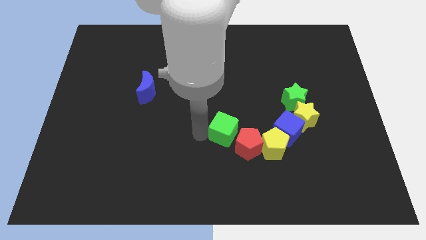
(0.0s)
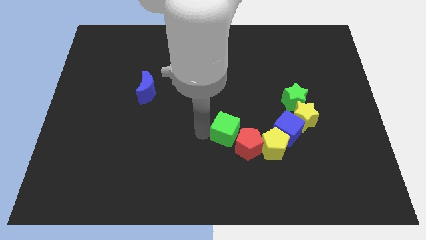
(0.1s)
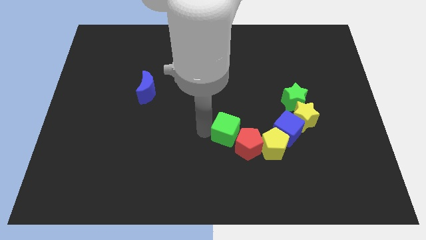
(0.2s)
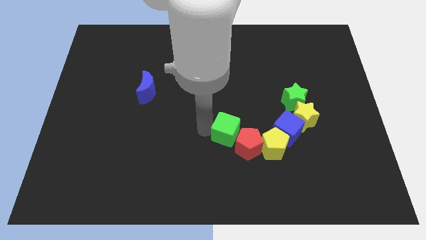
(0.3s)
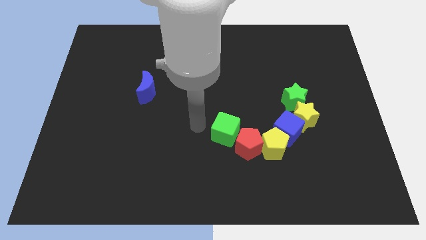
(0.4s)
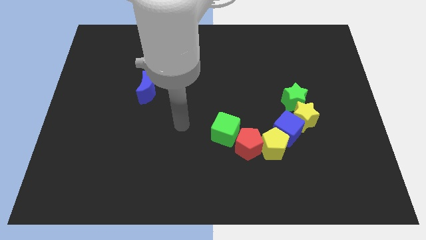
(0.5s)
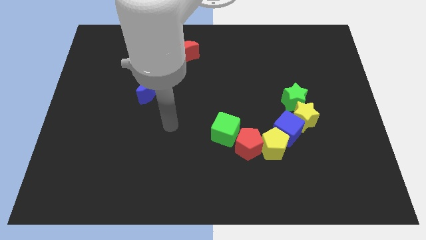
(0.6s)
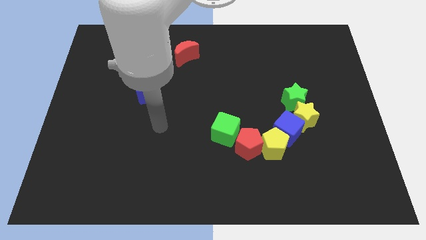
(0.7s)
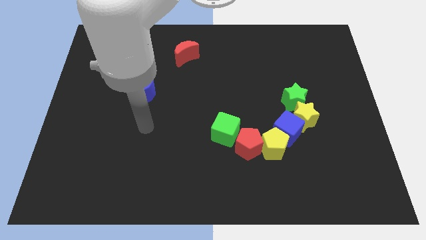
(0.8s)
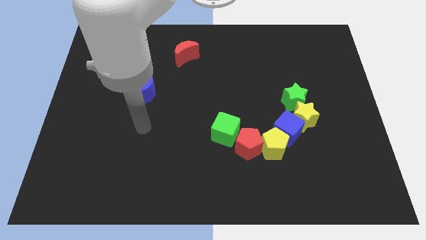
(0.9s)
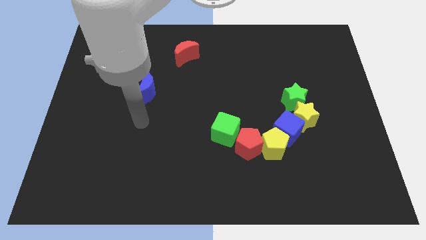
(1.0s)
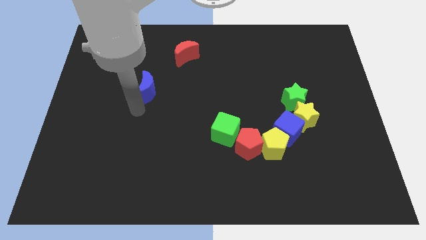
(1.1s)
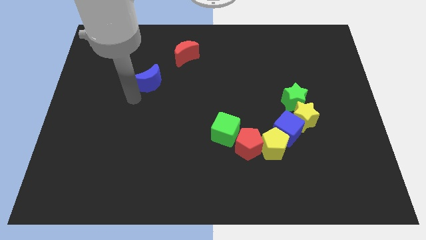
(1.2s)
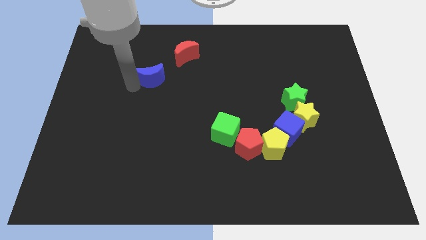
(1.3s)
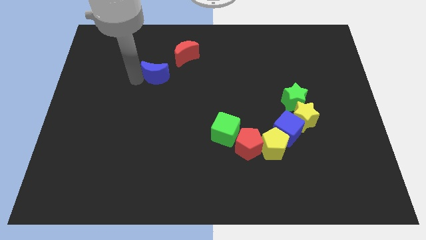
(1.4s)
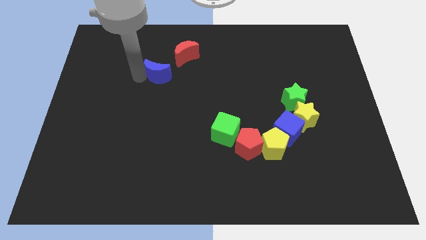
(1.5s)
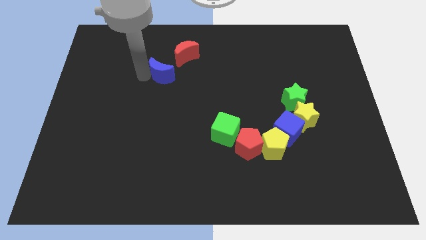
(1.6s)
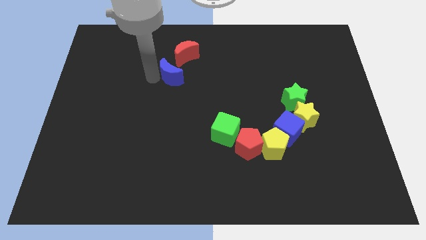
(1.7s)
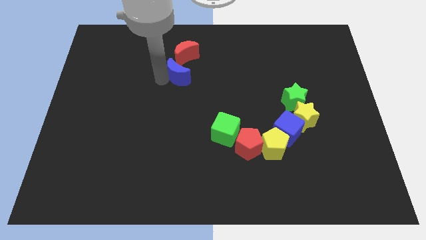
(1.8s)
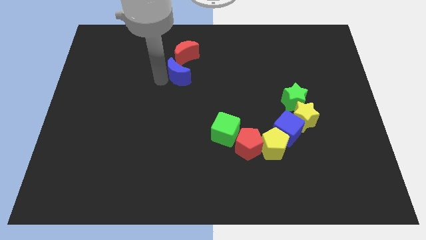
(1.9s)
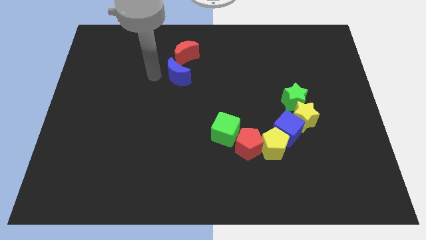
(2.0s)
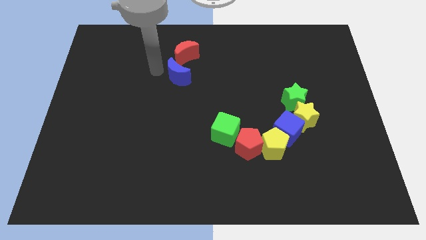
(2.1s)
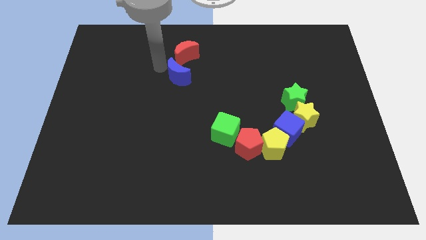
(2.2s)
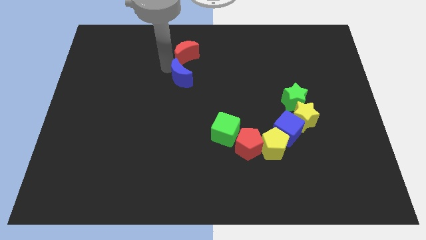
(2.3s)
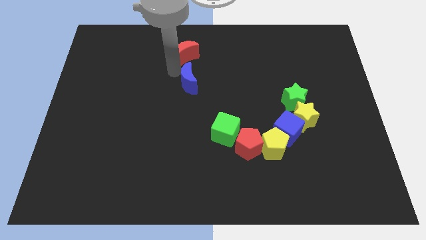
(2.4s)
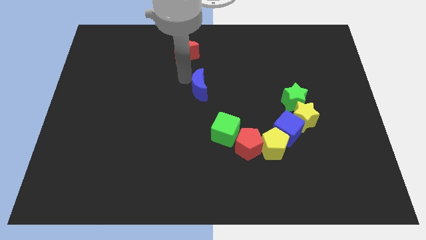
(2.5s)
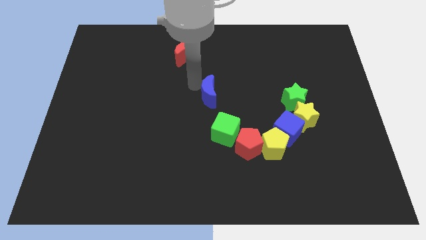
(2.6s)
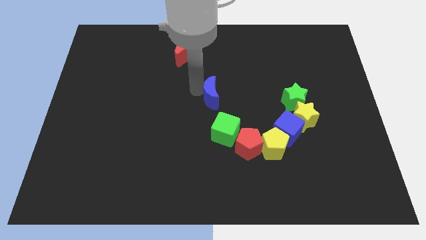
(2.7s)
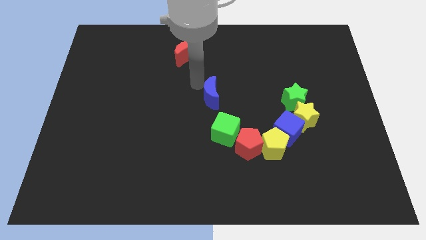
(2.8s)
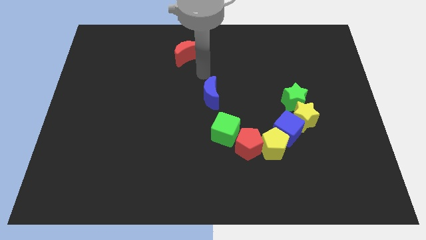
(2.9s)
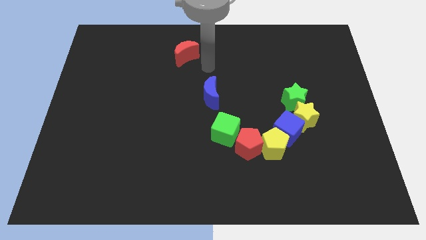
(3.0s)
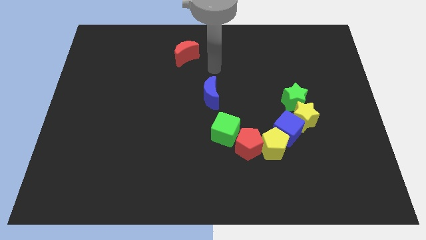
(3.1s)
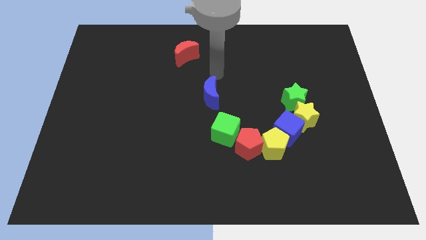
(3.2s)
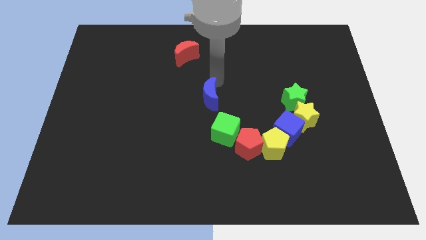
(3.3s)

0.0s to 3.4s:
place the blue moon diagonally to the red moon

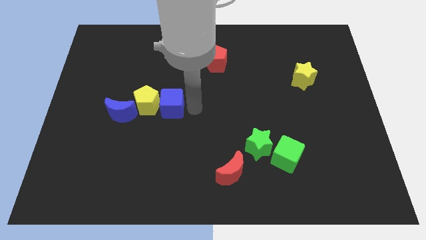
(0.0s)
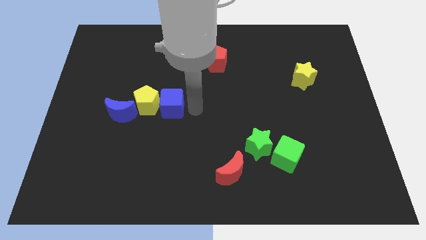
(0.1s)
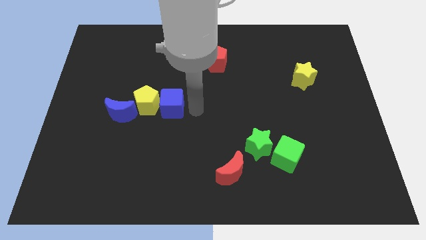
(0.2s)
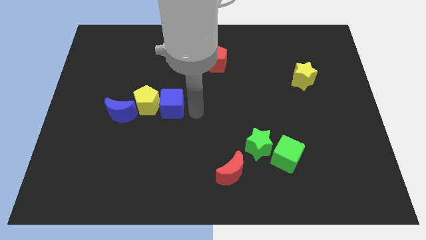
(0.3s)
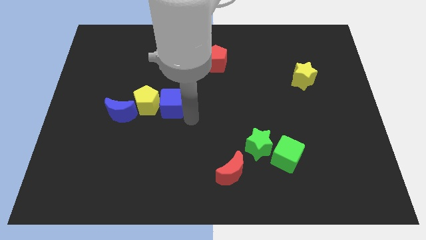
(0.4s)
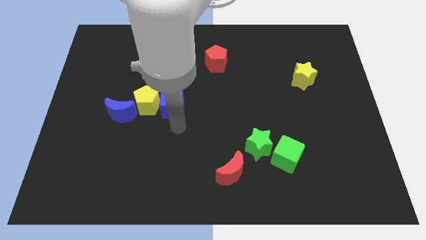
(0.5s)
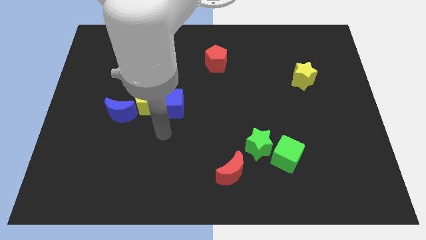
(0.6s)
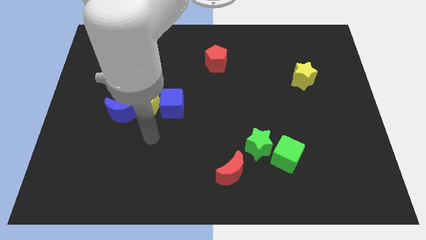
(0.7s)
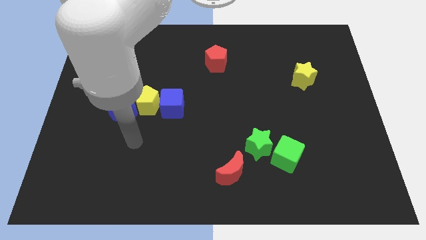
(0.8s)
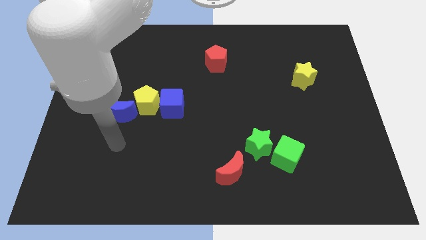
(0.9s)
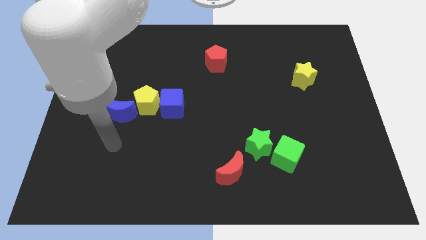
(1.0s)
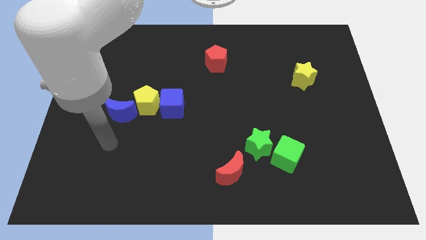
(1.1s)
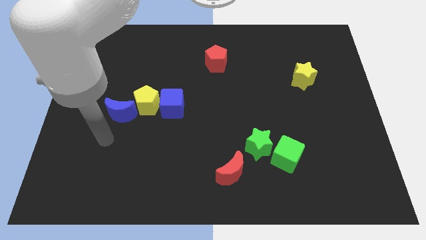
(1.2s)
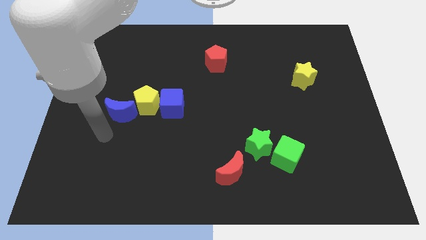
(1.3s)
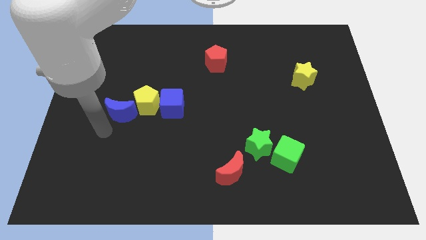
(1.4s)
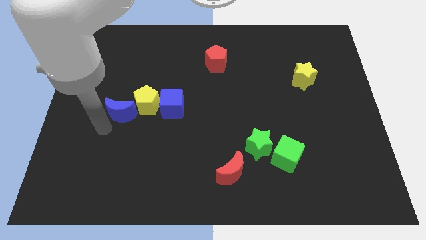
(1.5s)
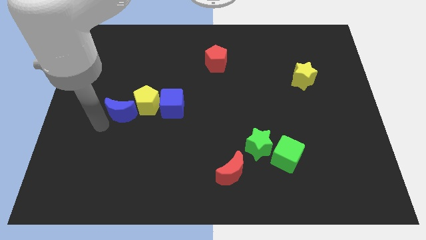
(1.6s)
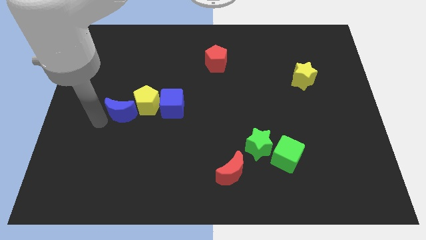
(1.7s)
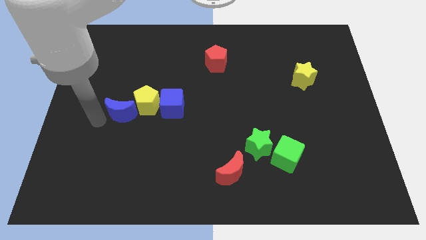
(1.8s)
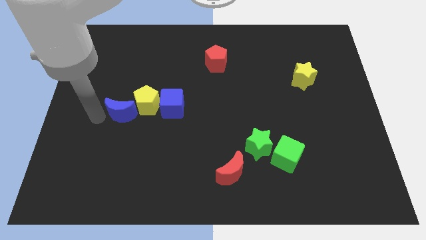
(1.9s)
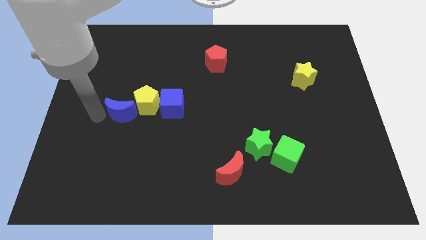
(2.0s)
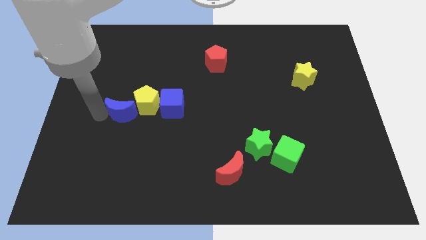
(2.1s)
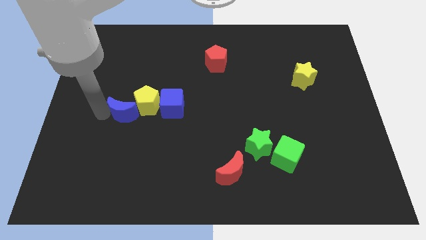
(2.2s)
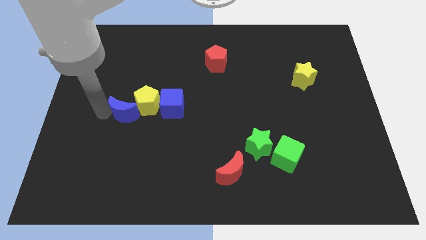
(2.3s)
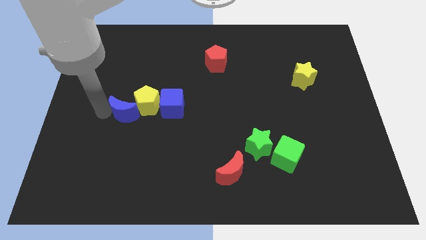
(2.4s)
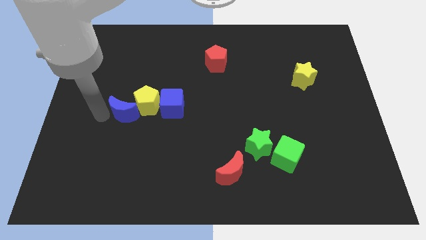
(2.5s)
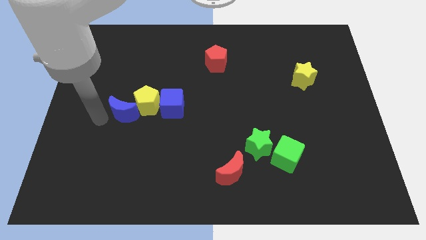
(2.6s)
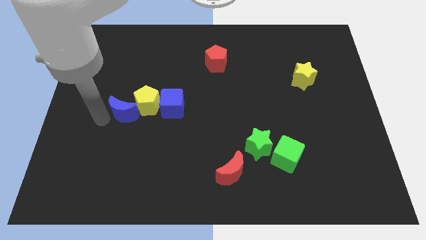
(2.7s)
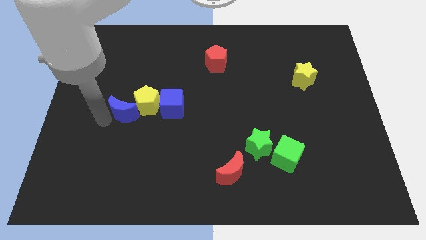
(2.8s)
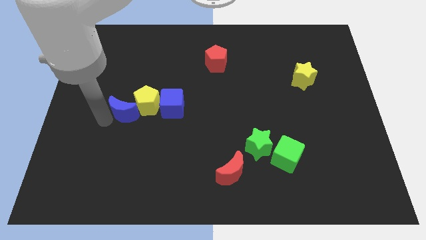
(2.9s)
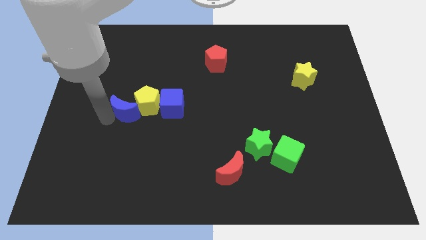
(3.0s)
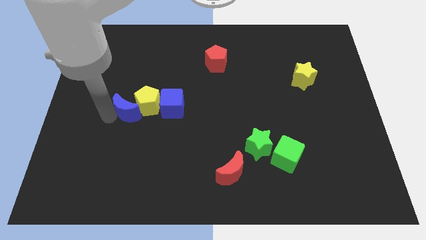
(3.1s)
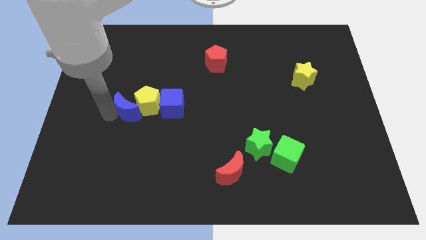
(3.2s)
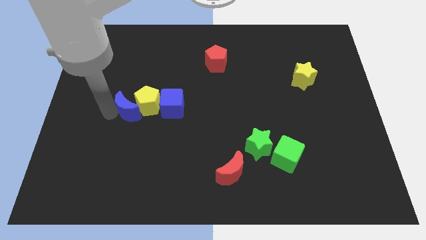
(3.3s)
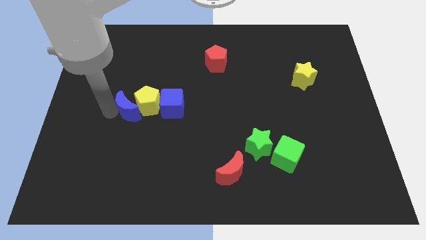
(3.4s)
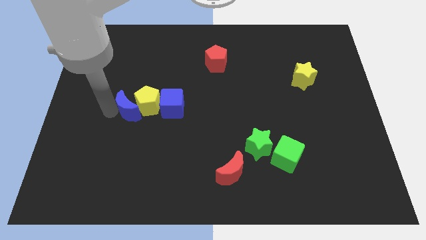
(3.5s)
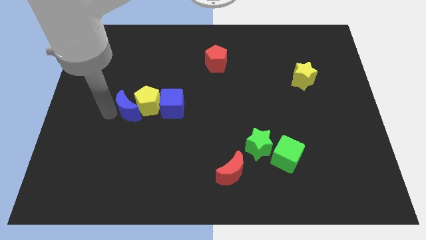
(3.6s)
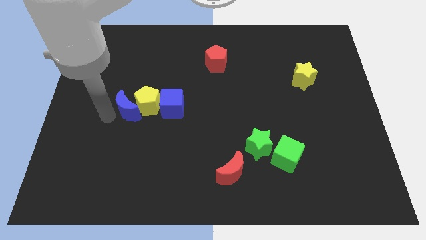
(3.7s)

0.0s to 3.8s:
adjust the blue crescent at the left side of the yellow pentagon

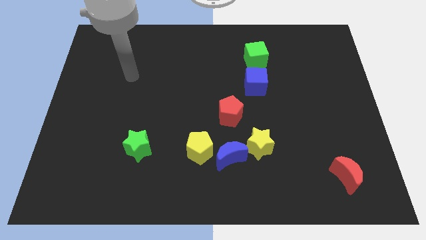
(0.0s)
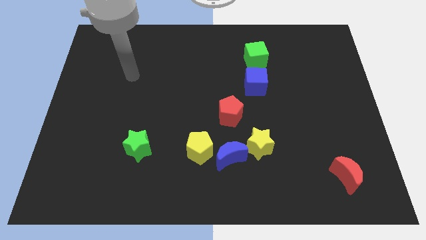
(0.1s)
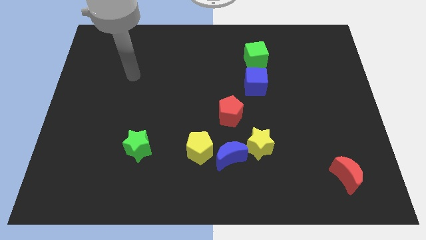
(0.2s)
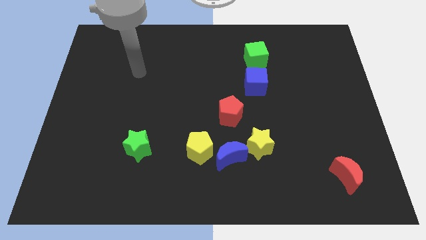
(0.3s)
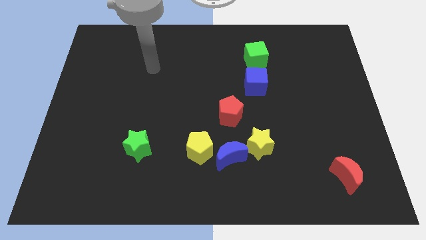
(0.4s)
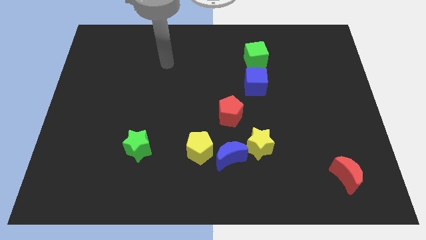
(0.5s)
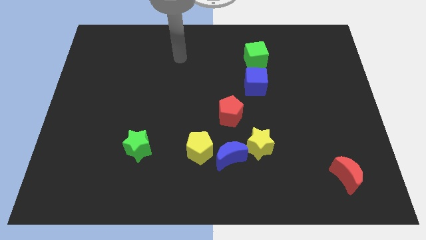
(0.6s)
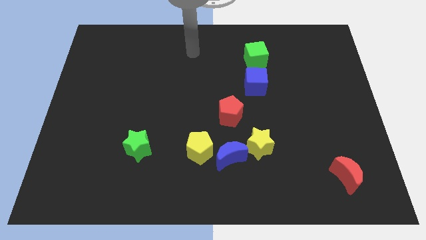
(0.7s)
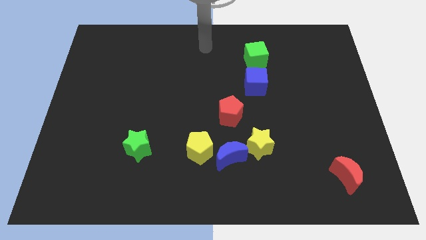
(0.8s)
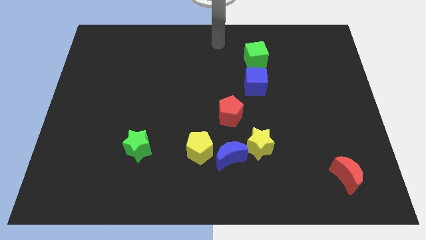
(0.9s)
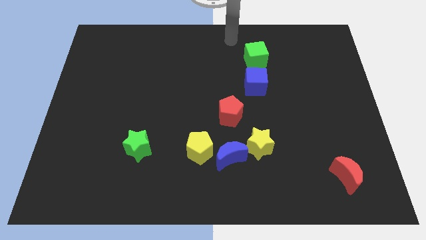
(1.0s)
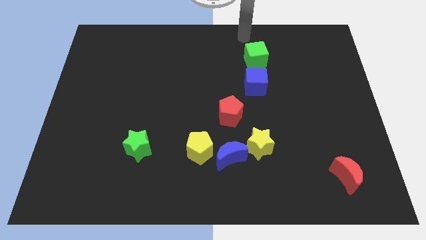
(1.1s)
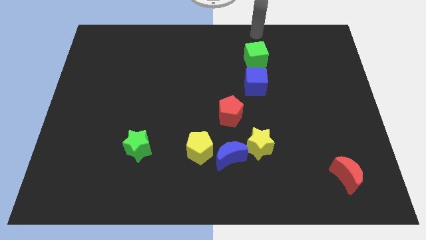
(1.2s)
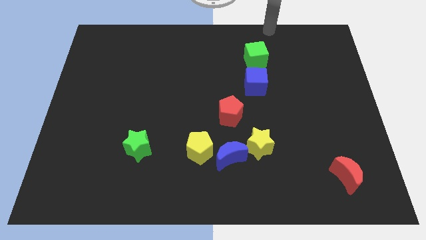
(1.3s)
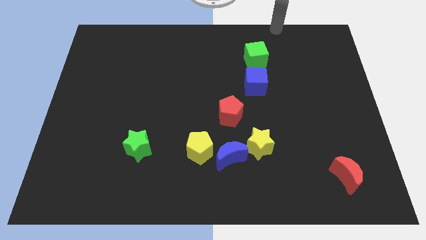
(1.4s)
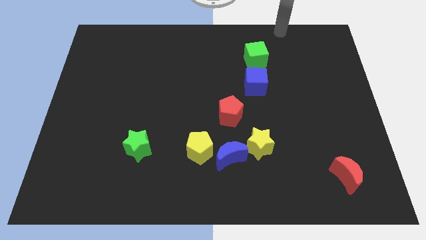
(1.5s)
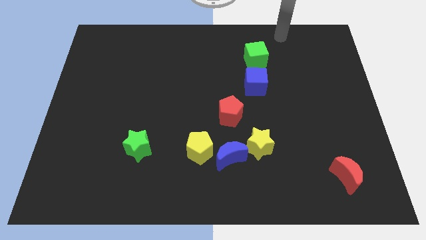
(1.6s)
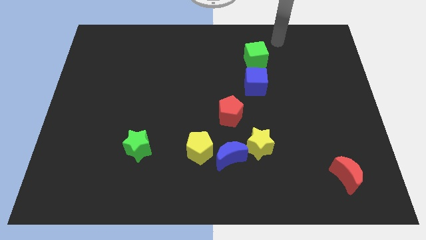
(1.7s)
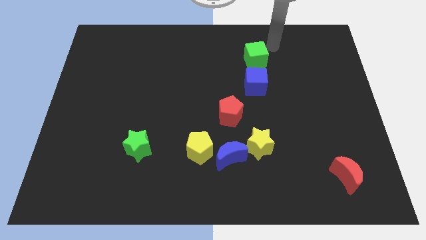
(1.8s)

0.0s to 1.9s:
move the arm towards the green cube
